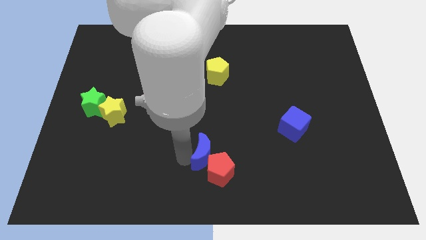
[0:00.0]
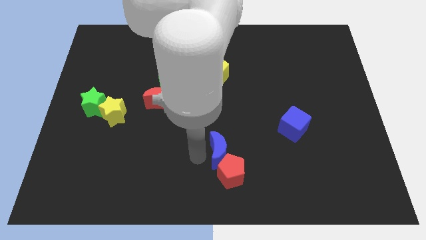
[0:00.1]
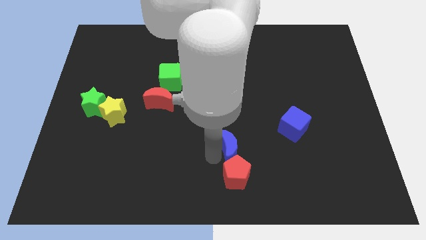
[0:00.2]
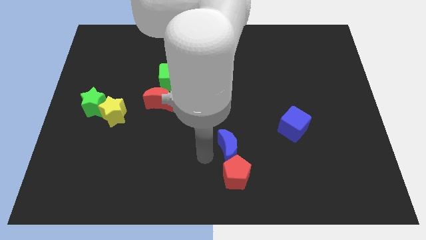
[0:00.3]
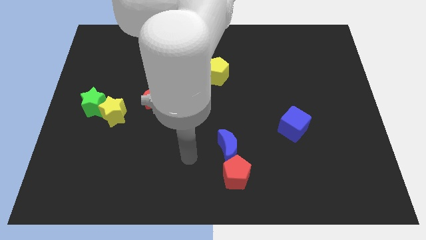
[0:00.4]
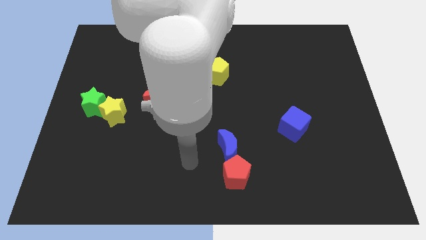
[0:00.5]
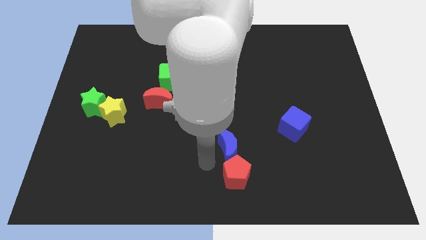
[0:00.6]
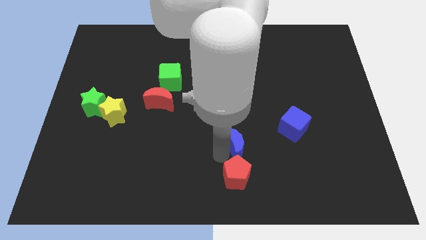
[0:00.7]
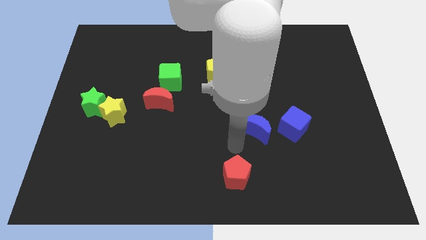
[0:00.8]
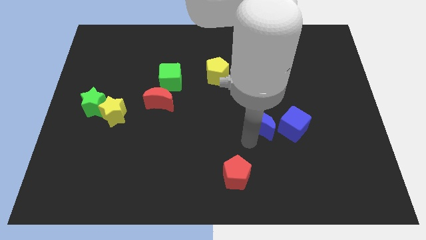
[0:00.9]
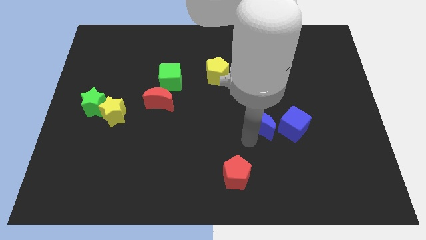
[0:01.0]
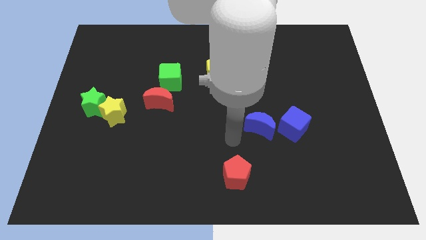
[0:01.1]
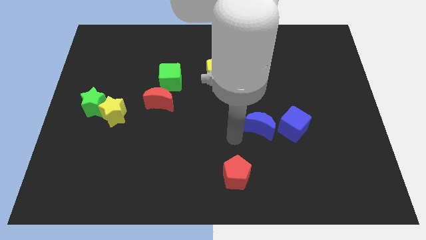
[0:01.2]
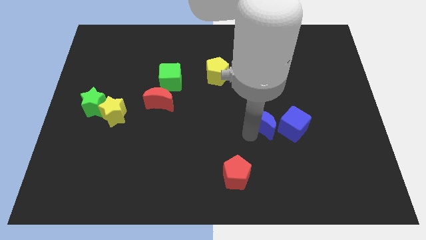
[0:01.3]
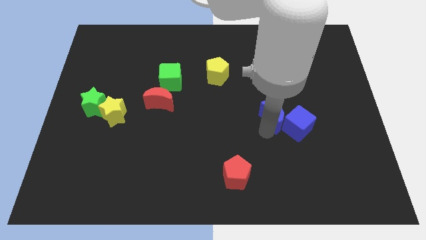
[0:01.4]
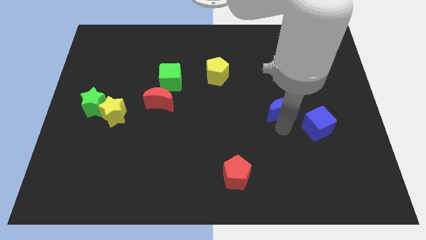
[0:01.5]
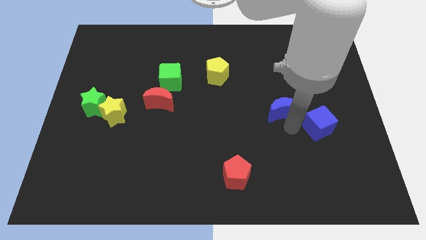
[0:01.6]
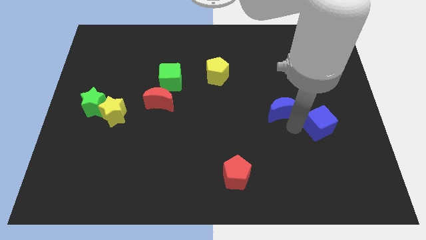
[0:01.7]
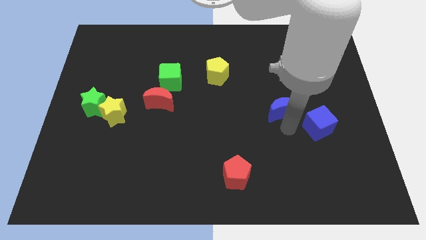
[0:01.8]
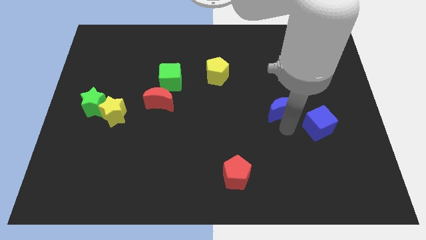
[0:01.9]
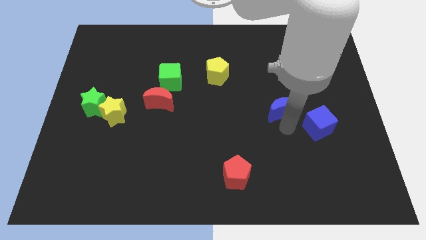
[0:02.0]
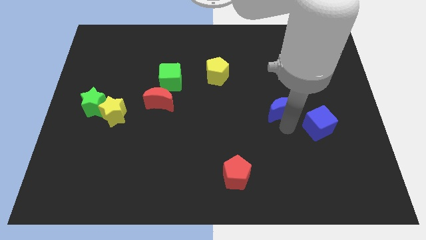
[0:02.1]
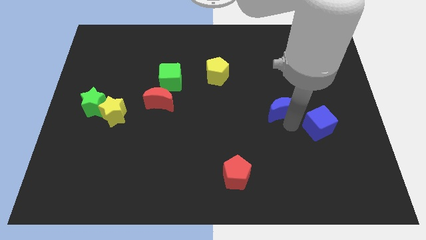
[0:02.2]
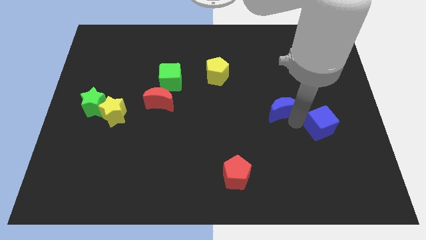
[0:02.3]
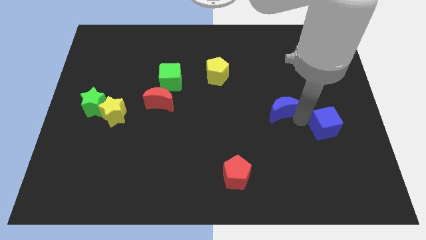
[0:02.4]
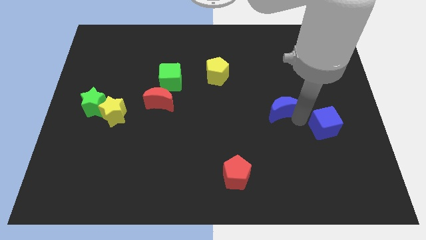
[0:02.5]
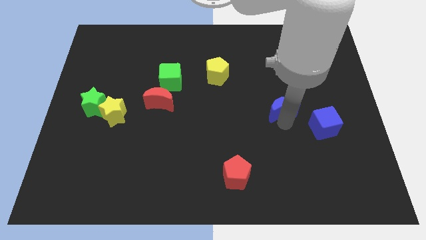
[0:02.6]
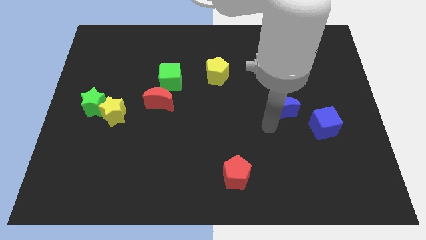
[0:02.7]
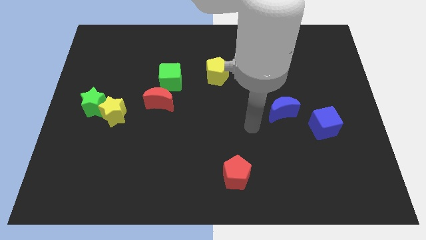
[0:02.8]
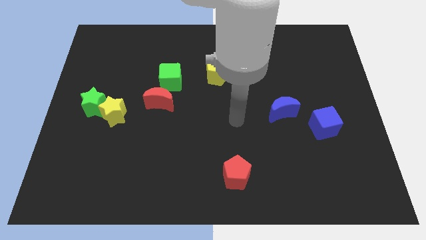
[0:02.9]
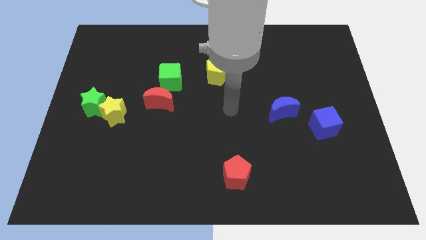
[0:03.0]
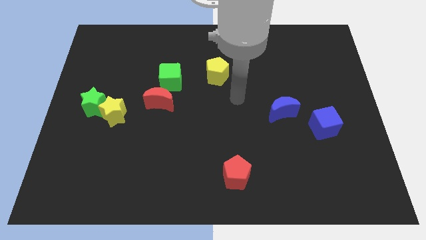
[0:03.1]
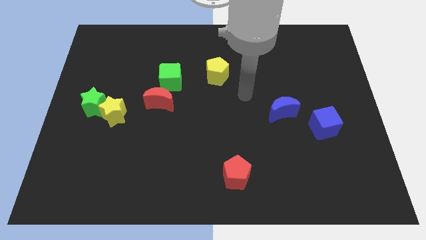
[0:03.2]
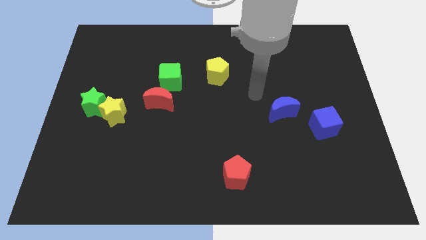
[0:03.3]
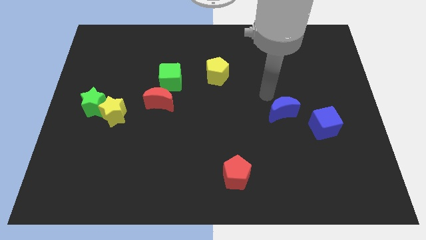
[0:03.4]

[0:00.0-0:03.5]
place the blue crescent to the right of the red crescent

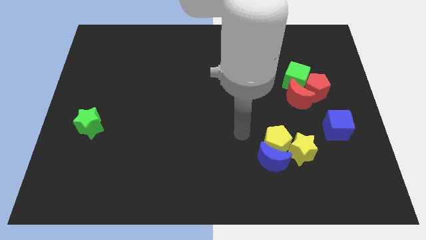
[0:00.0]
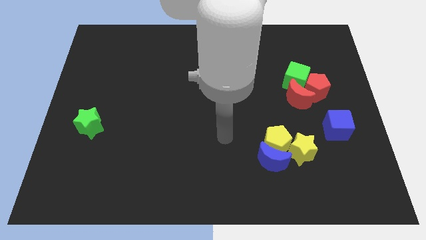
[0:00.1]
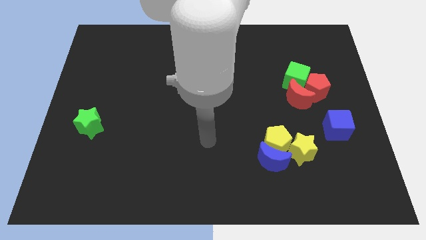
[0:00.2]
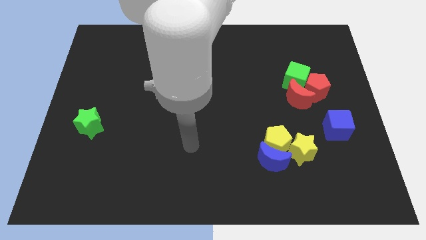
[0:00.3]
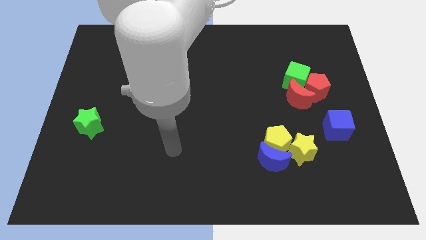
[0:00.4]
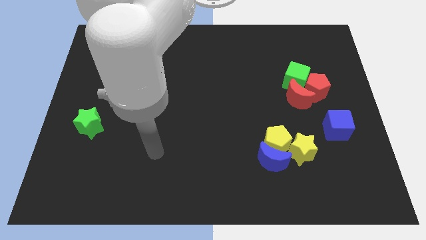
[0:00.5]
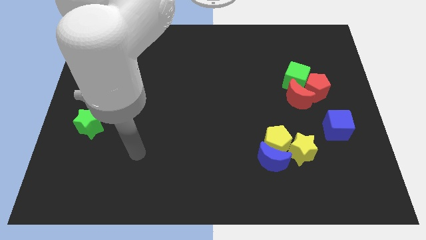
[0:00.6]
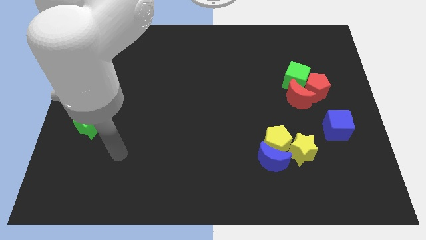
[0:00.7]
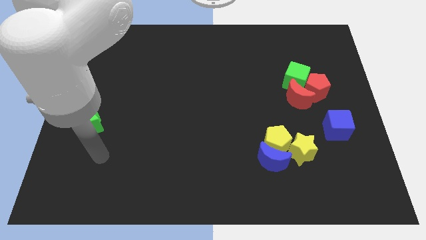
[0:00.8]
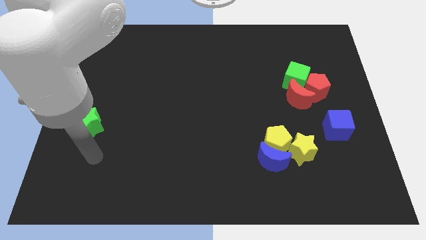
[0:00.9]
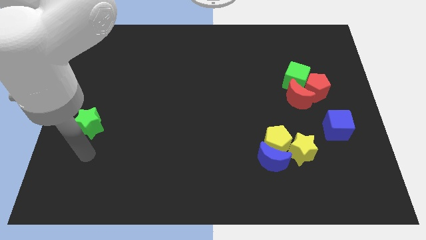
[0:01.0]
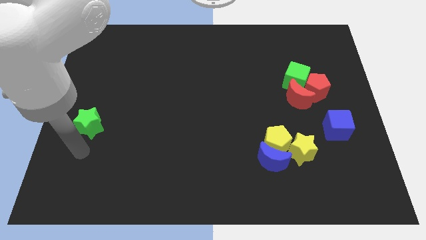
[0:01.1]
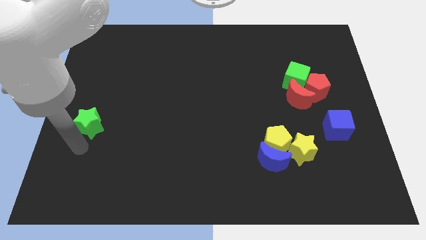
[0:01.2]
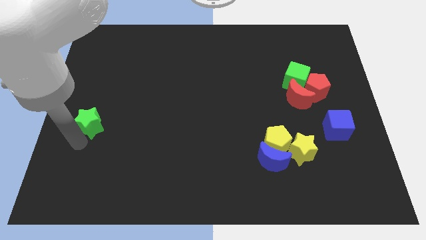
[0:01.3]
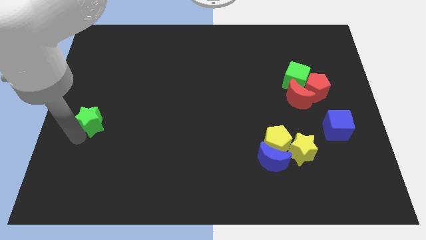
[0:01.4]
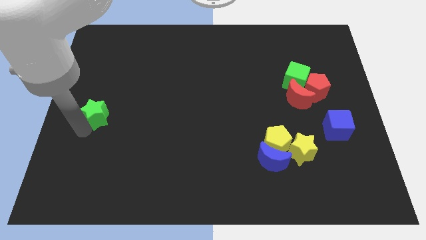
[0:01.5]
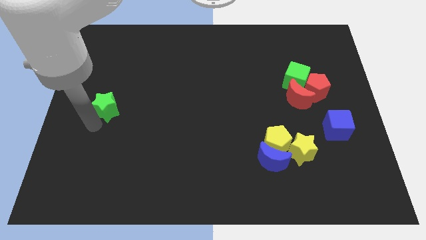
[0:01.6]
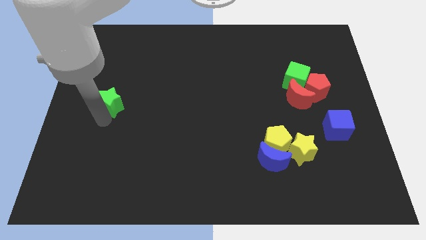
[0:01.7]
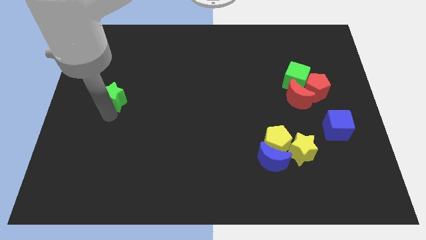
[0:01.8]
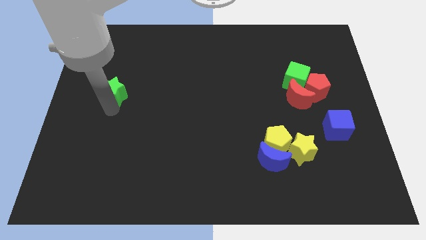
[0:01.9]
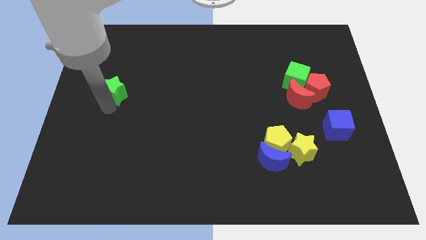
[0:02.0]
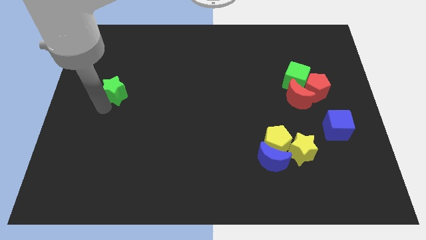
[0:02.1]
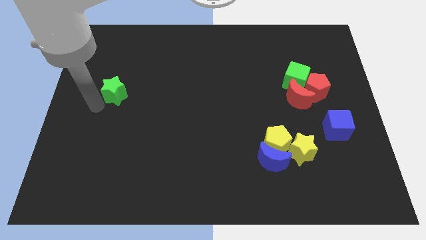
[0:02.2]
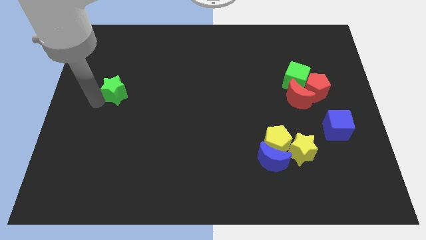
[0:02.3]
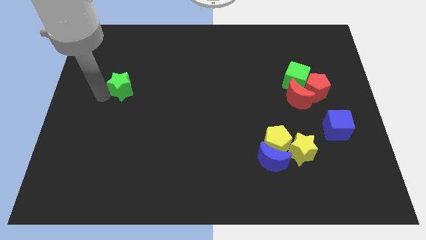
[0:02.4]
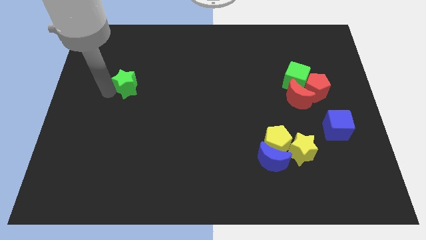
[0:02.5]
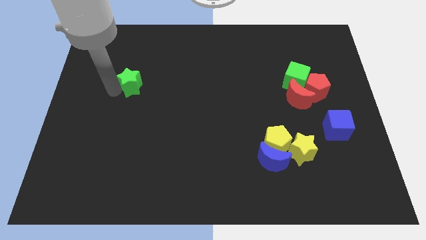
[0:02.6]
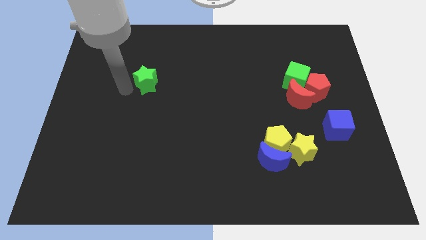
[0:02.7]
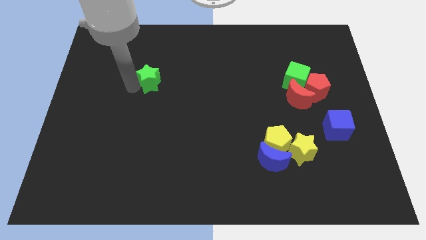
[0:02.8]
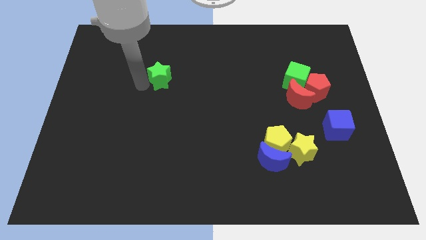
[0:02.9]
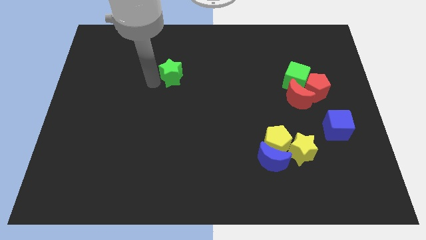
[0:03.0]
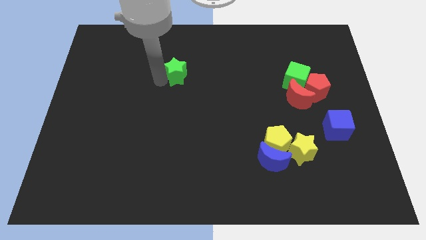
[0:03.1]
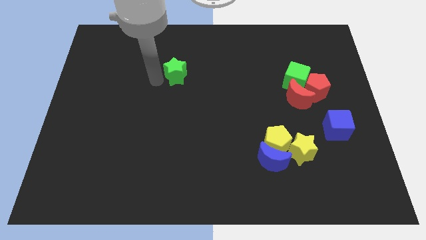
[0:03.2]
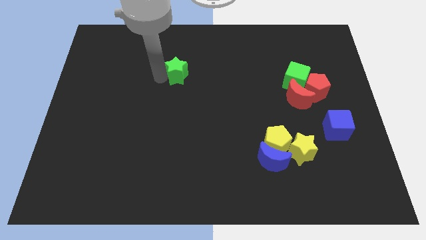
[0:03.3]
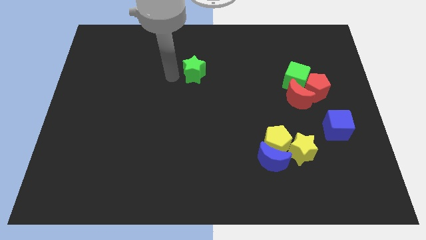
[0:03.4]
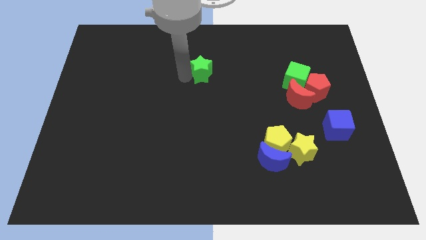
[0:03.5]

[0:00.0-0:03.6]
move the green star towards the top centre of the board

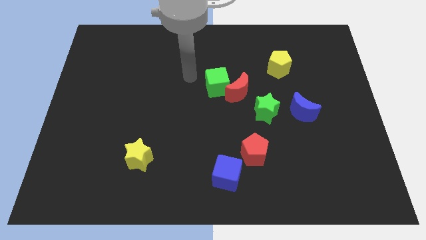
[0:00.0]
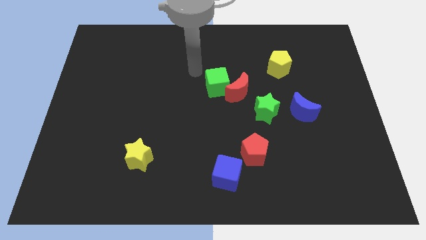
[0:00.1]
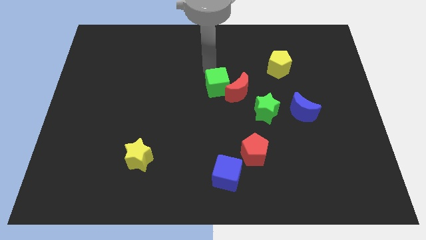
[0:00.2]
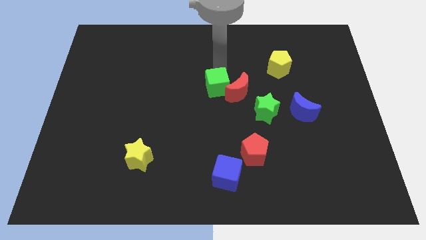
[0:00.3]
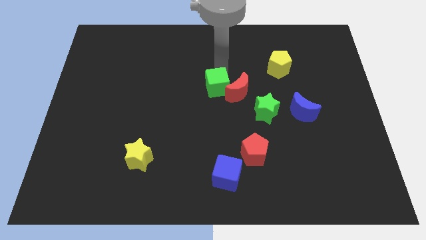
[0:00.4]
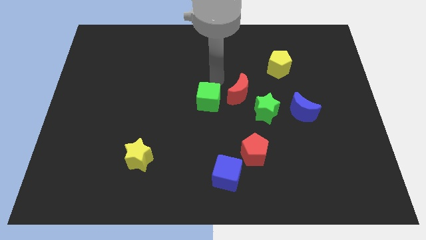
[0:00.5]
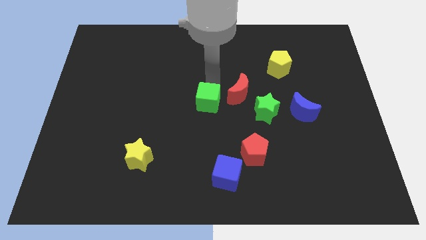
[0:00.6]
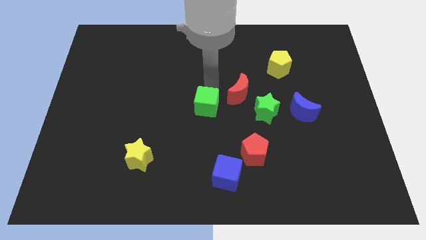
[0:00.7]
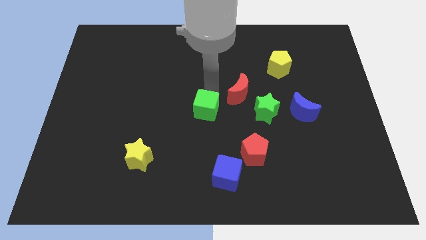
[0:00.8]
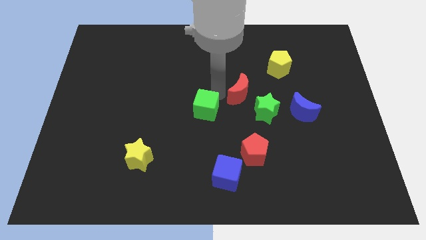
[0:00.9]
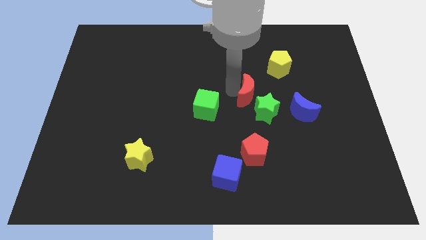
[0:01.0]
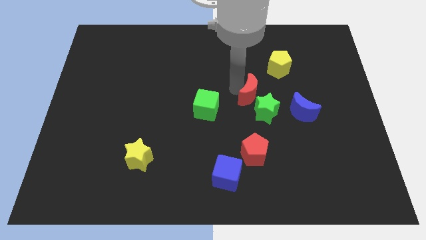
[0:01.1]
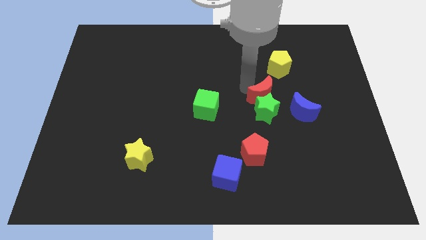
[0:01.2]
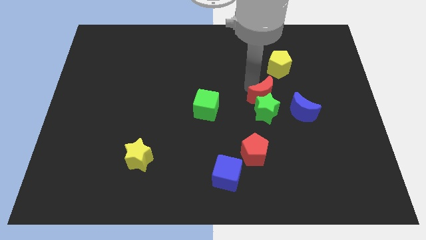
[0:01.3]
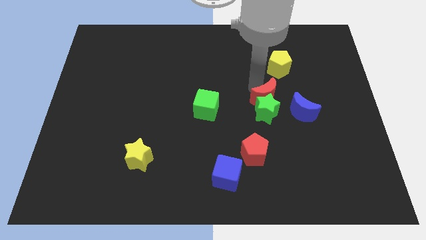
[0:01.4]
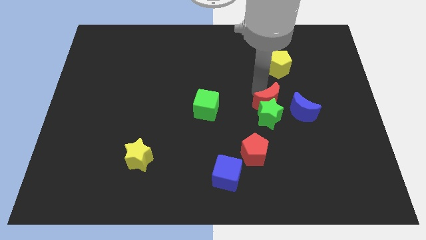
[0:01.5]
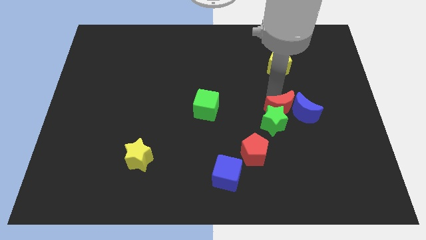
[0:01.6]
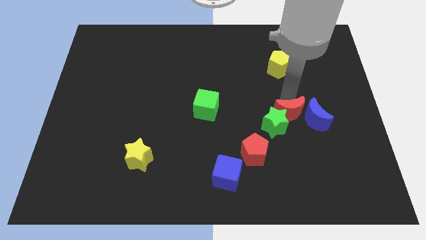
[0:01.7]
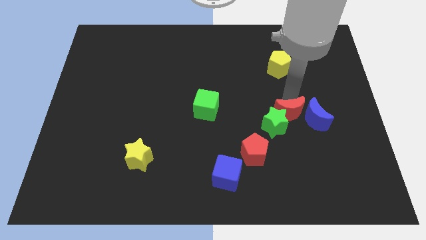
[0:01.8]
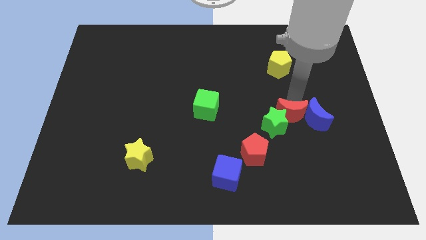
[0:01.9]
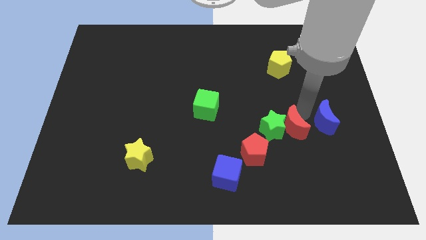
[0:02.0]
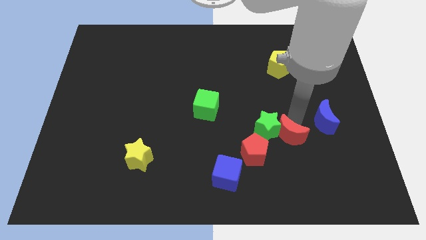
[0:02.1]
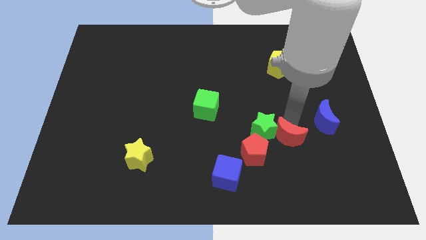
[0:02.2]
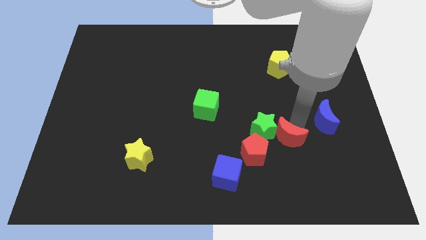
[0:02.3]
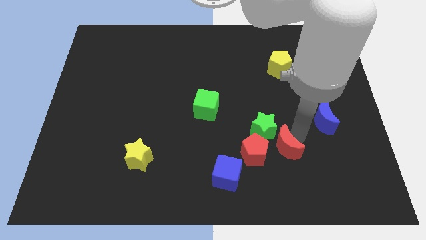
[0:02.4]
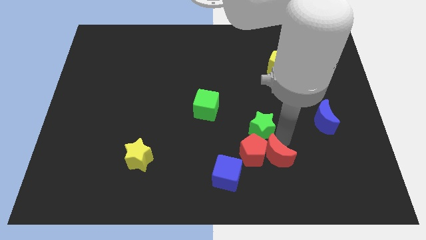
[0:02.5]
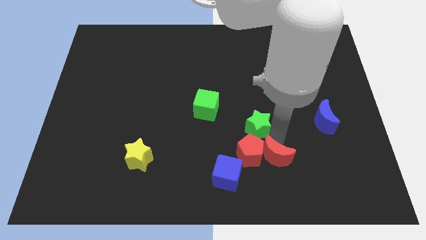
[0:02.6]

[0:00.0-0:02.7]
push red crescent beside red pentagon
